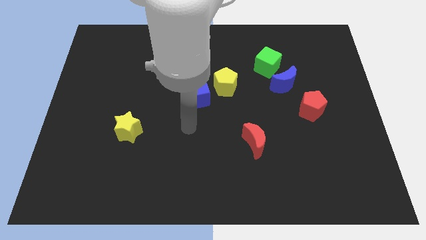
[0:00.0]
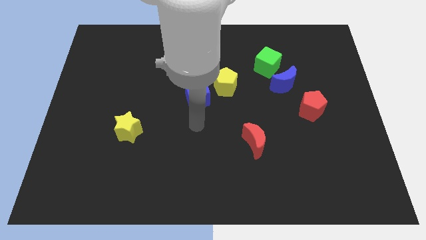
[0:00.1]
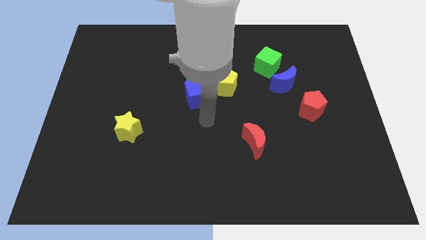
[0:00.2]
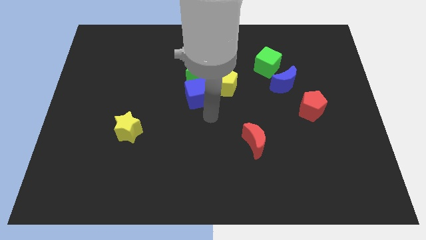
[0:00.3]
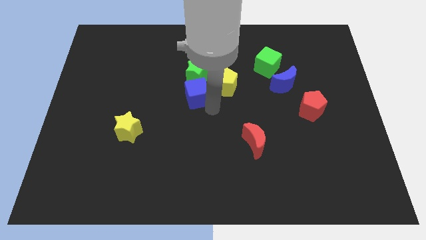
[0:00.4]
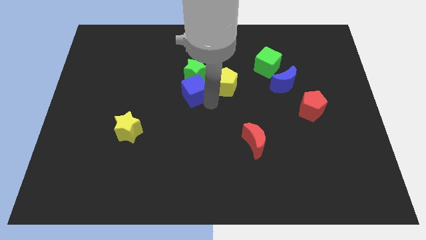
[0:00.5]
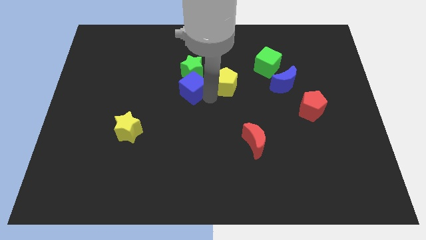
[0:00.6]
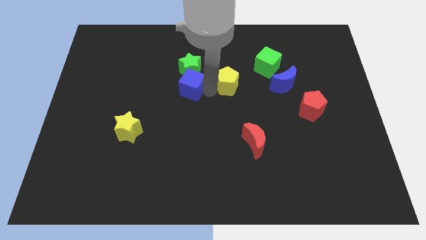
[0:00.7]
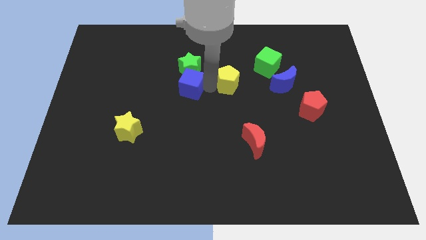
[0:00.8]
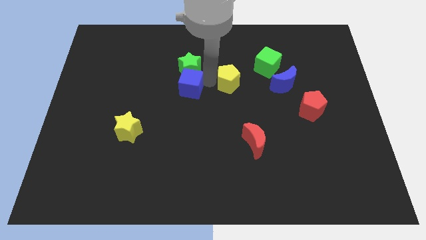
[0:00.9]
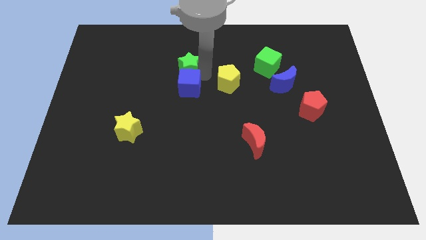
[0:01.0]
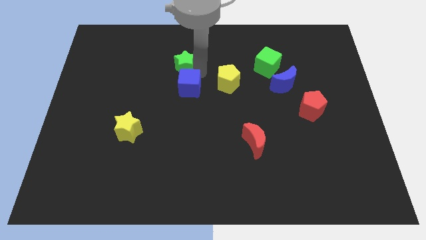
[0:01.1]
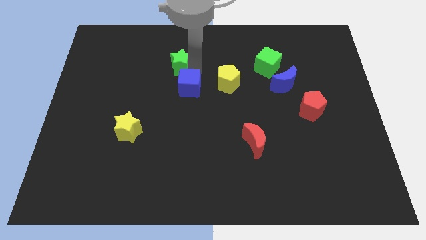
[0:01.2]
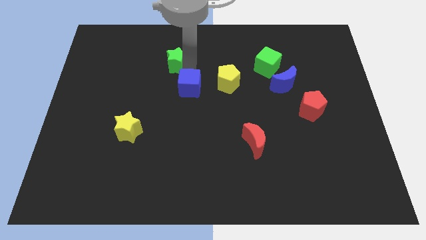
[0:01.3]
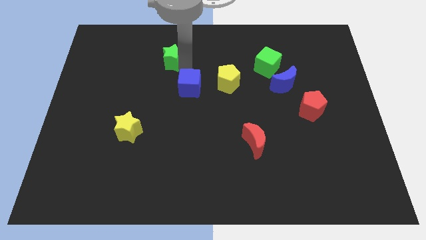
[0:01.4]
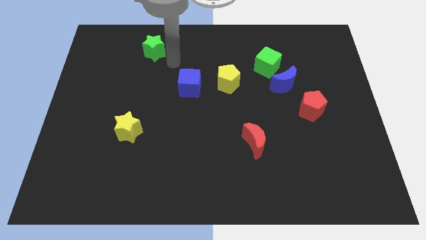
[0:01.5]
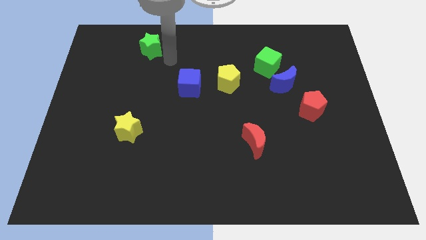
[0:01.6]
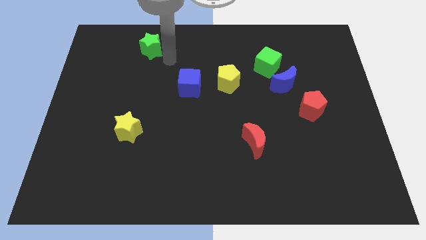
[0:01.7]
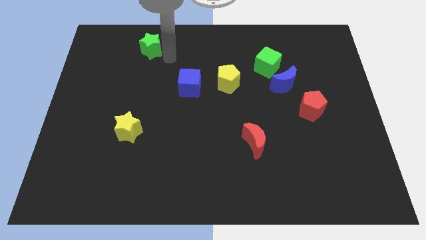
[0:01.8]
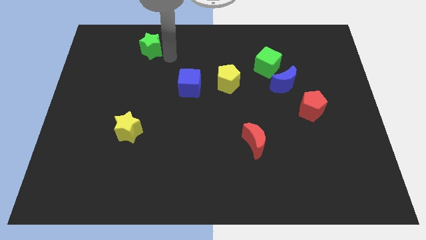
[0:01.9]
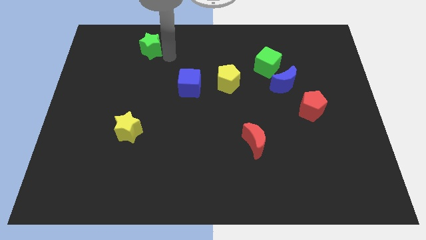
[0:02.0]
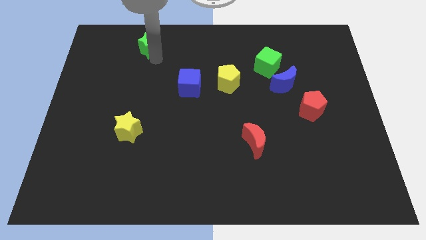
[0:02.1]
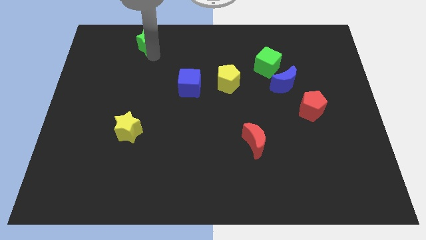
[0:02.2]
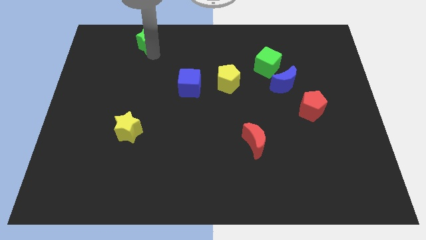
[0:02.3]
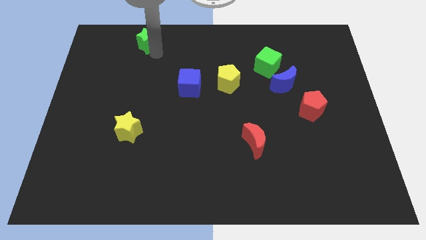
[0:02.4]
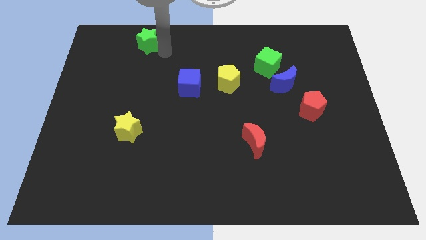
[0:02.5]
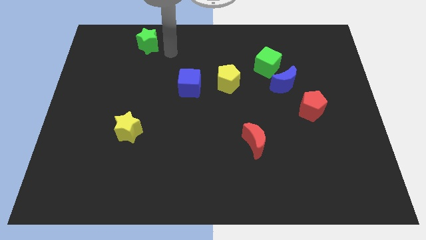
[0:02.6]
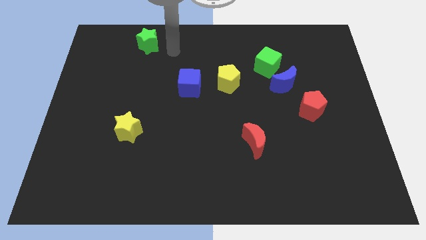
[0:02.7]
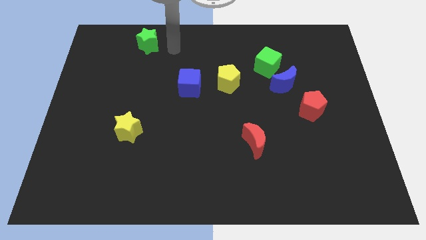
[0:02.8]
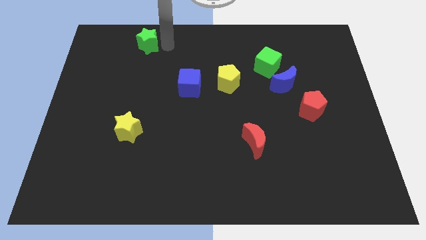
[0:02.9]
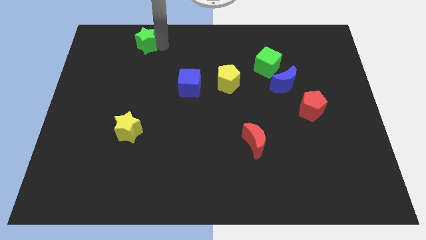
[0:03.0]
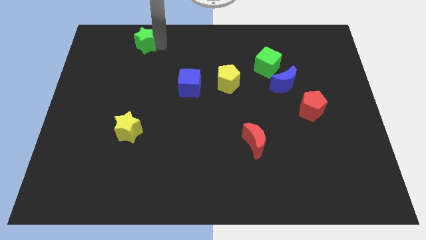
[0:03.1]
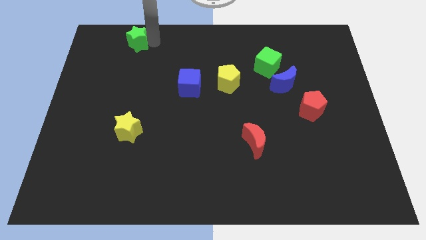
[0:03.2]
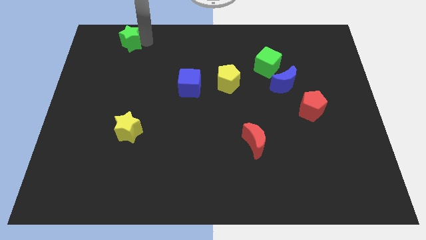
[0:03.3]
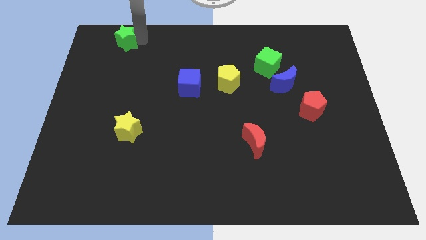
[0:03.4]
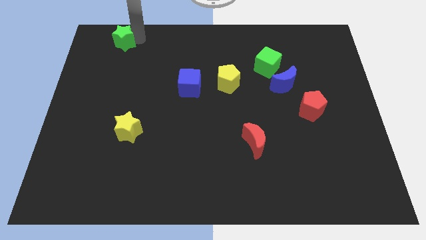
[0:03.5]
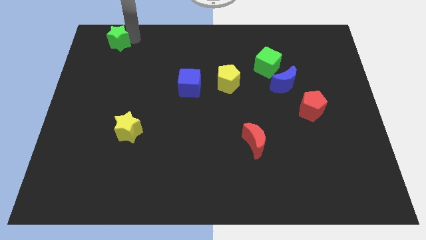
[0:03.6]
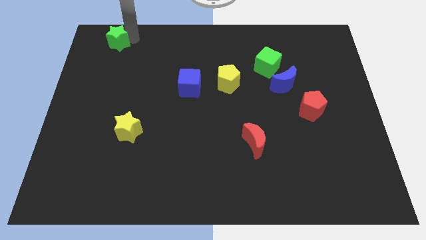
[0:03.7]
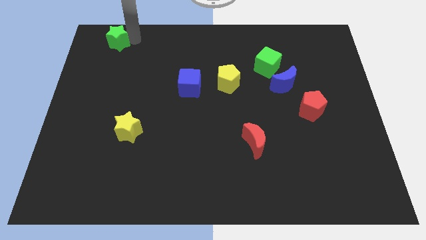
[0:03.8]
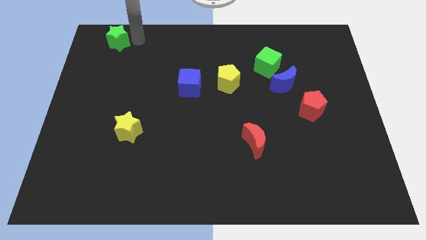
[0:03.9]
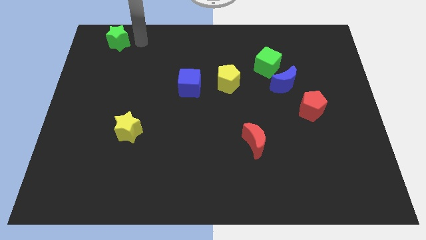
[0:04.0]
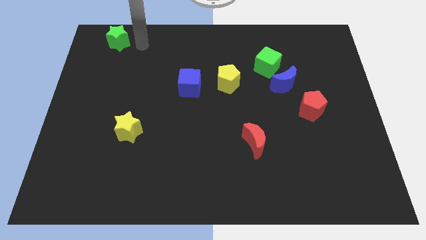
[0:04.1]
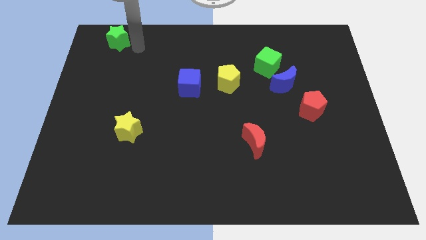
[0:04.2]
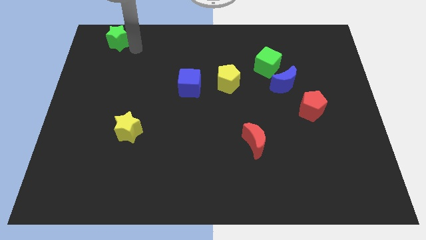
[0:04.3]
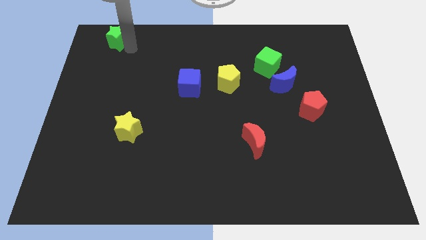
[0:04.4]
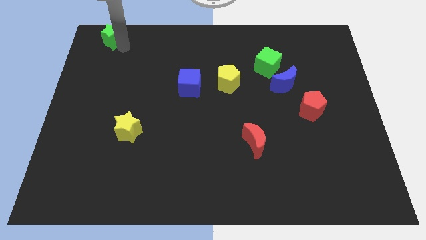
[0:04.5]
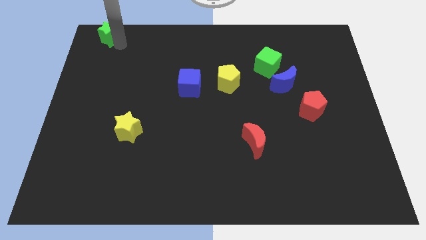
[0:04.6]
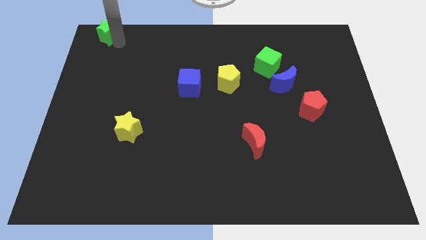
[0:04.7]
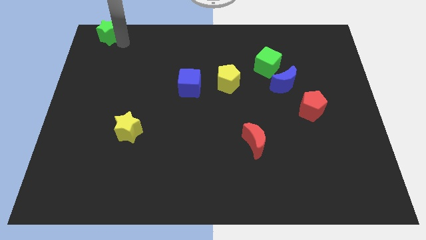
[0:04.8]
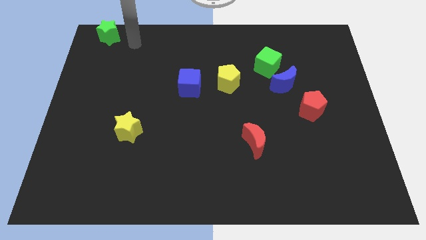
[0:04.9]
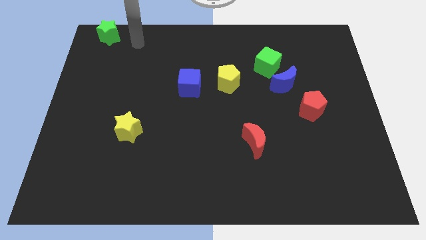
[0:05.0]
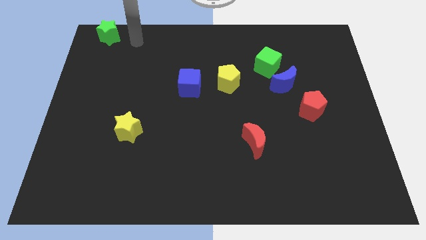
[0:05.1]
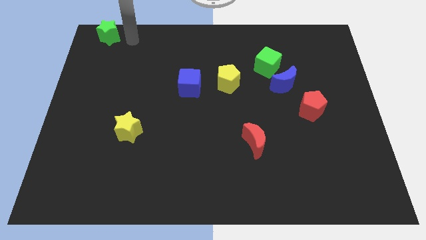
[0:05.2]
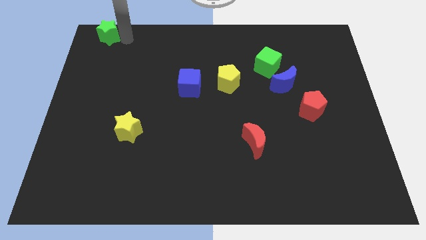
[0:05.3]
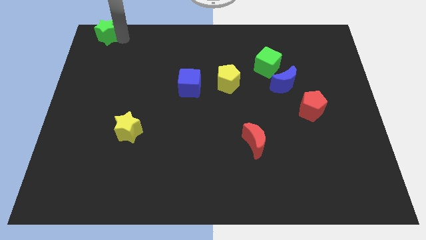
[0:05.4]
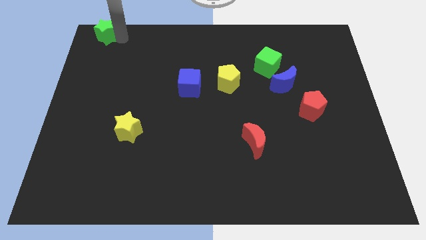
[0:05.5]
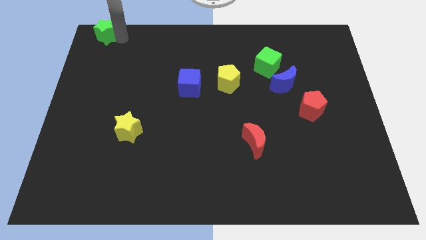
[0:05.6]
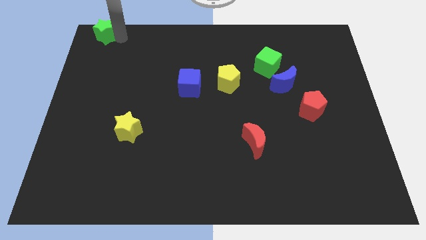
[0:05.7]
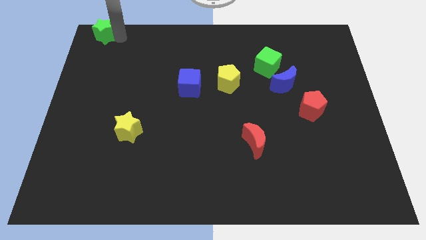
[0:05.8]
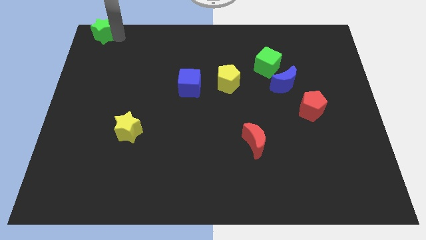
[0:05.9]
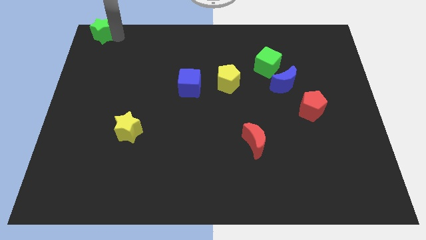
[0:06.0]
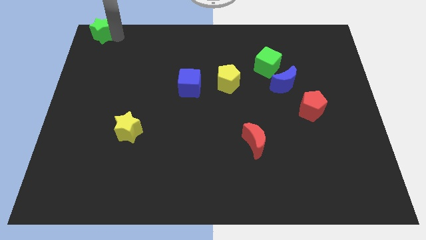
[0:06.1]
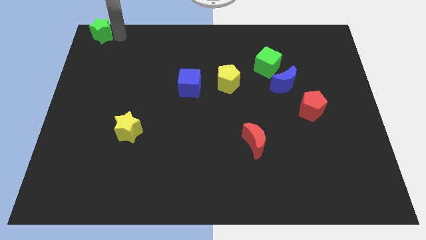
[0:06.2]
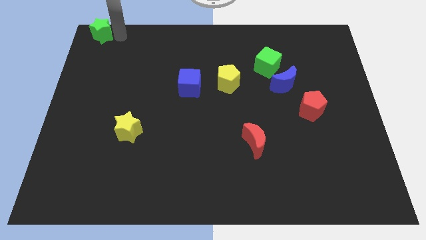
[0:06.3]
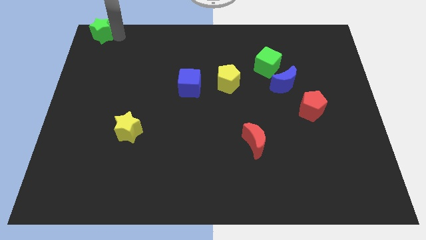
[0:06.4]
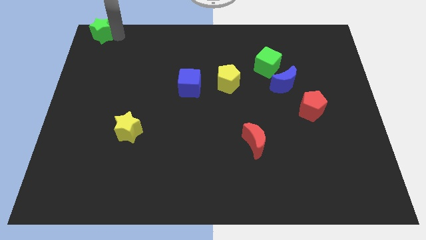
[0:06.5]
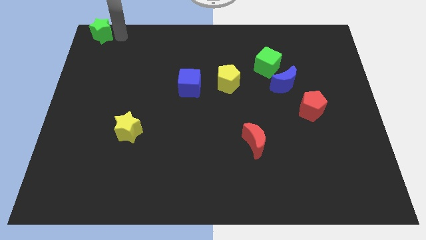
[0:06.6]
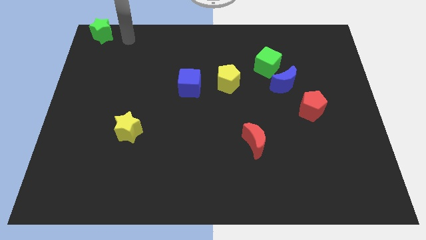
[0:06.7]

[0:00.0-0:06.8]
push the green star to the left top of the board

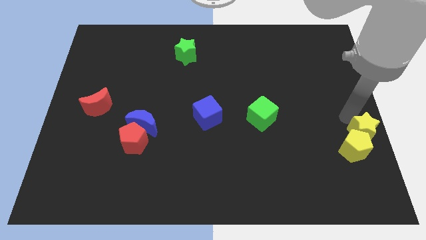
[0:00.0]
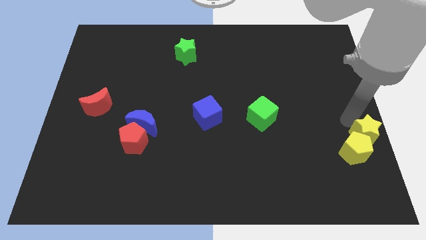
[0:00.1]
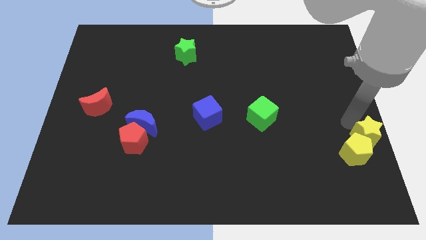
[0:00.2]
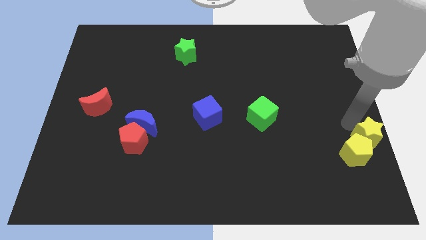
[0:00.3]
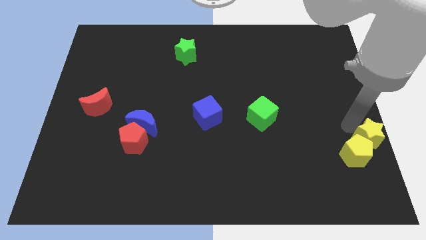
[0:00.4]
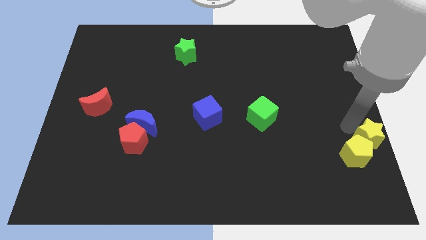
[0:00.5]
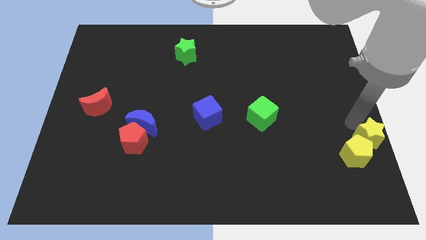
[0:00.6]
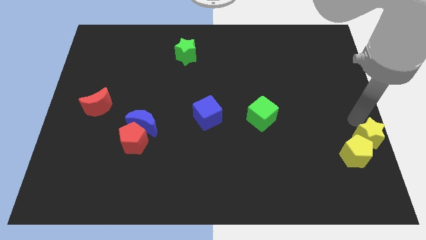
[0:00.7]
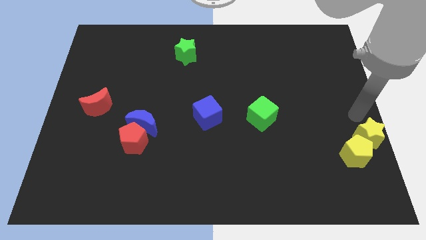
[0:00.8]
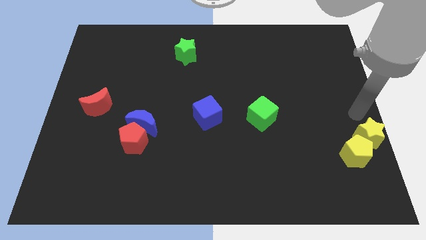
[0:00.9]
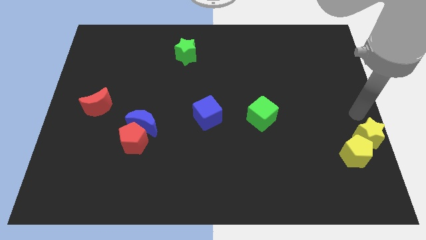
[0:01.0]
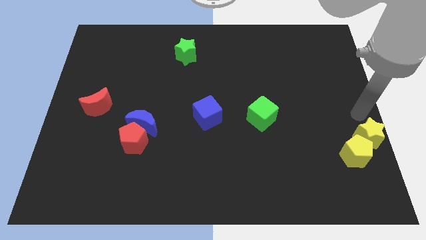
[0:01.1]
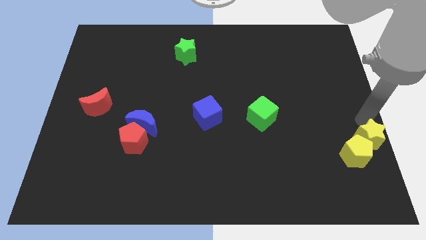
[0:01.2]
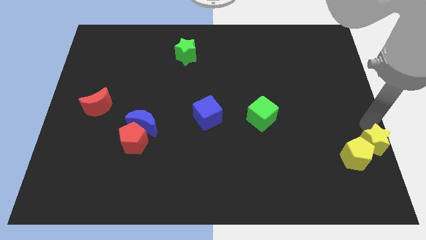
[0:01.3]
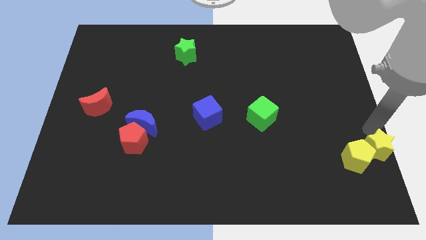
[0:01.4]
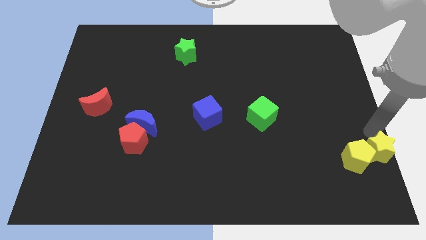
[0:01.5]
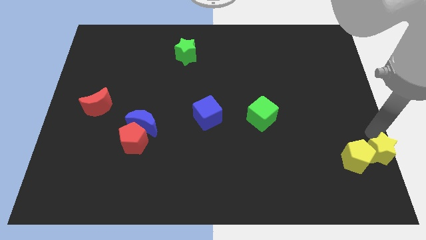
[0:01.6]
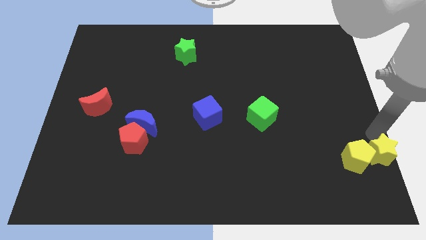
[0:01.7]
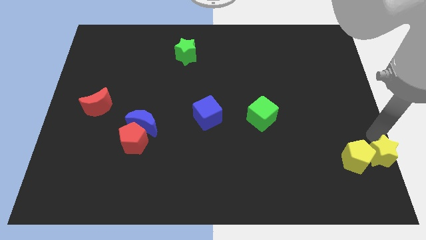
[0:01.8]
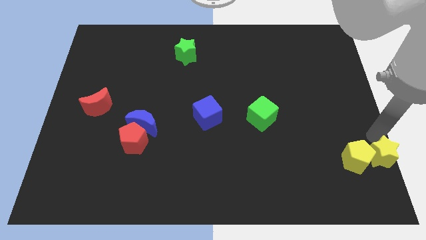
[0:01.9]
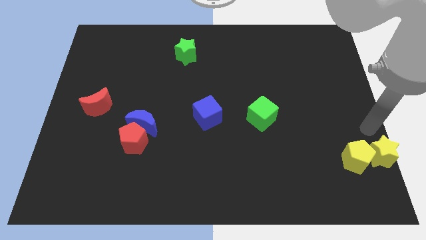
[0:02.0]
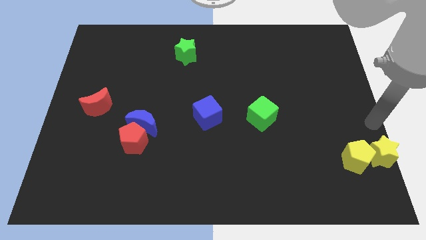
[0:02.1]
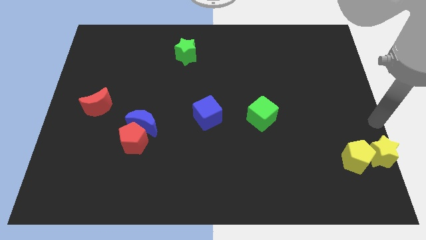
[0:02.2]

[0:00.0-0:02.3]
move the yellow star to the right side of the yellow pentagon

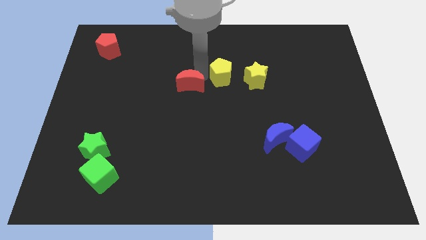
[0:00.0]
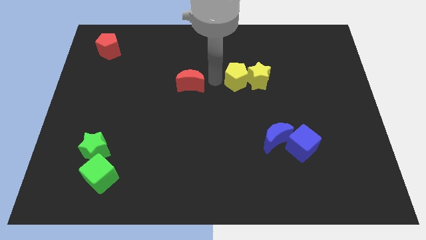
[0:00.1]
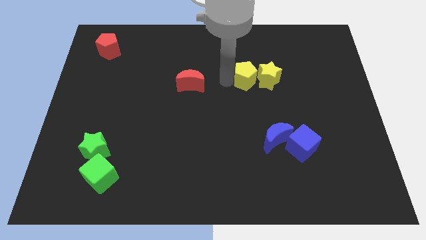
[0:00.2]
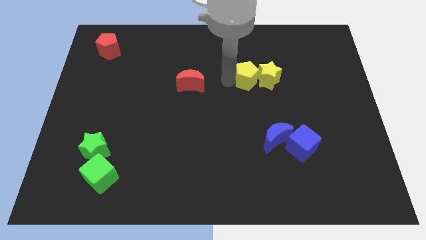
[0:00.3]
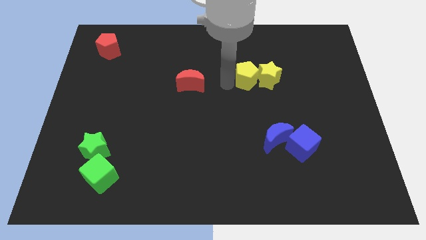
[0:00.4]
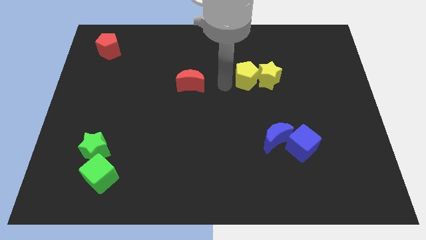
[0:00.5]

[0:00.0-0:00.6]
place the yellow pentagon left to the yellow star
